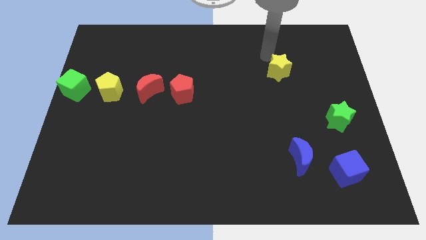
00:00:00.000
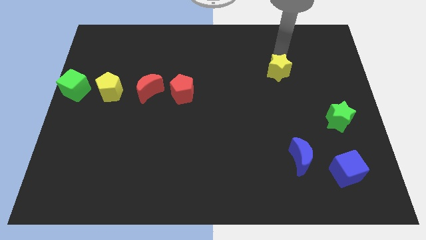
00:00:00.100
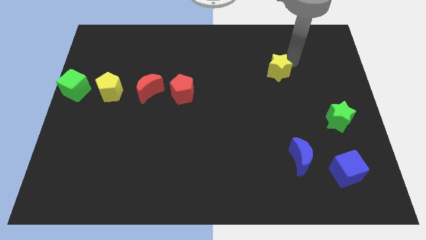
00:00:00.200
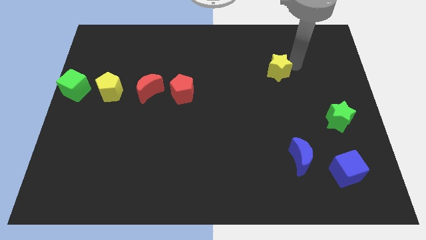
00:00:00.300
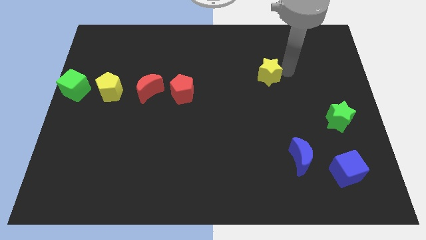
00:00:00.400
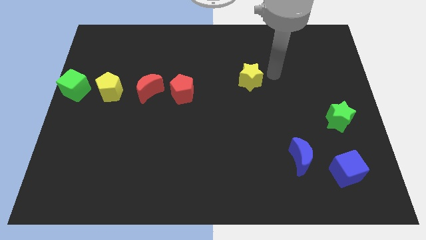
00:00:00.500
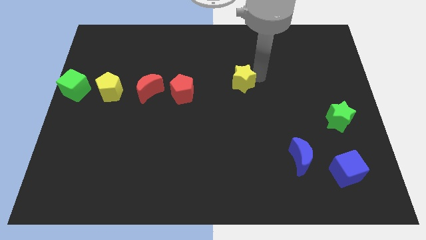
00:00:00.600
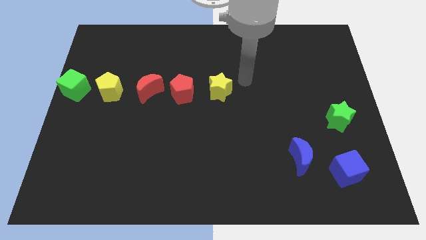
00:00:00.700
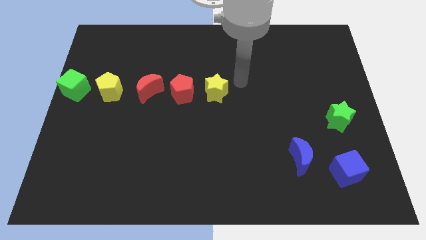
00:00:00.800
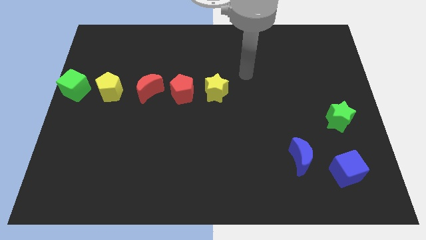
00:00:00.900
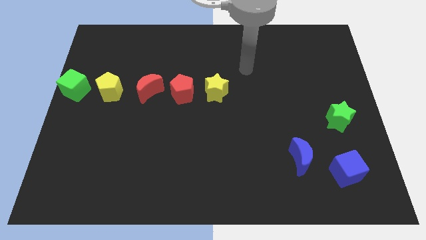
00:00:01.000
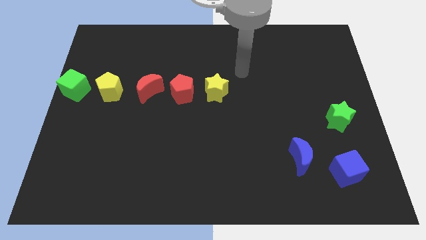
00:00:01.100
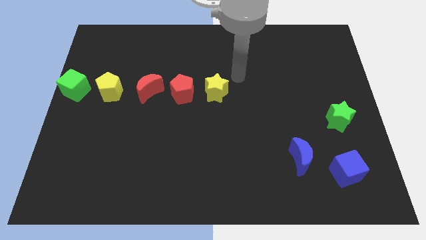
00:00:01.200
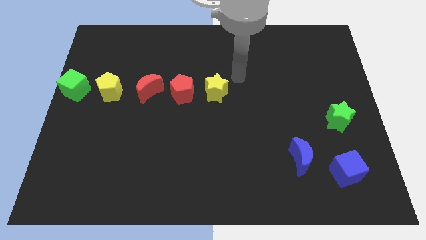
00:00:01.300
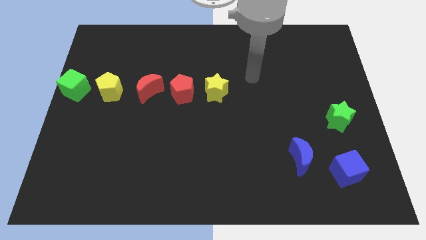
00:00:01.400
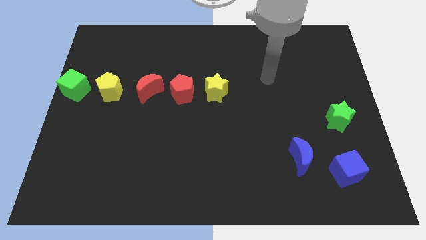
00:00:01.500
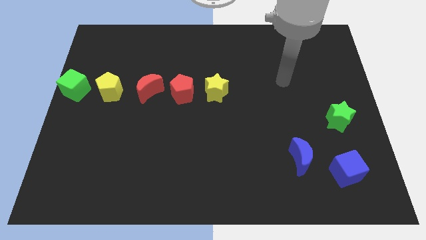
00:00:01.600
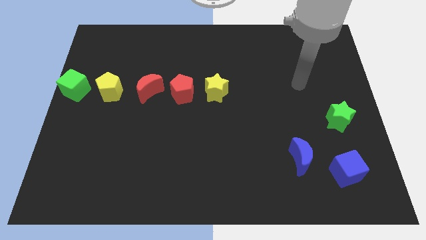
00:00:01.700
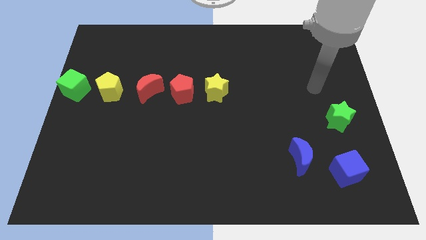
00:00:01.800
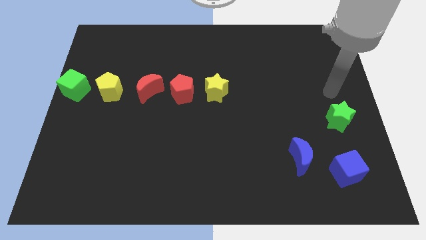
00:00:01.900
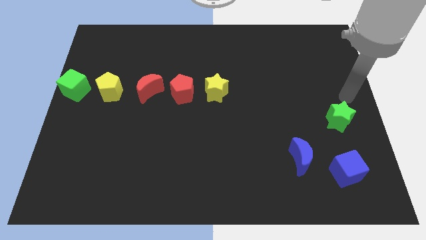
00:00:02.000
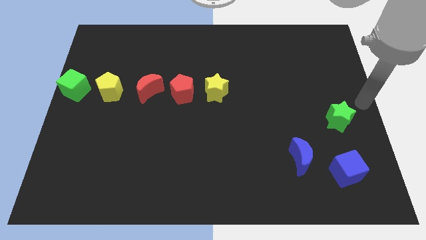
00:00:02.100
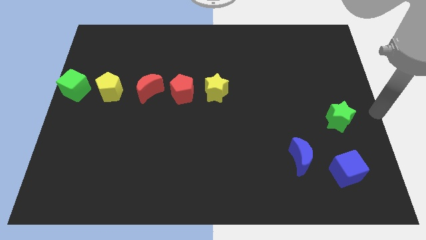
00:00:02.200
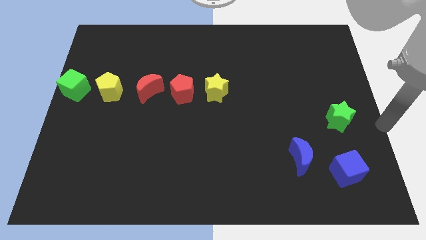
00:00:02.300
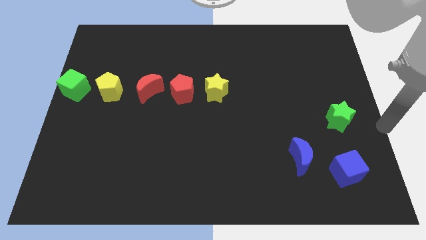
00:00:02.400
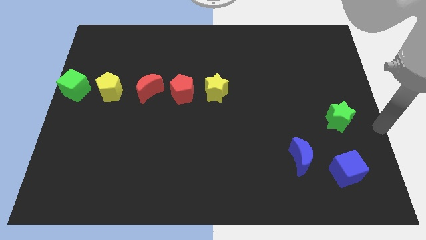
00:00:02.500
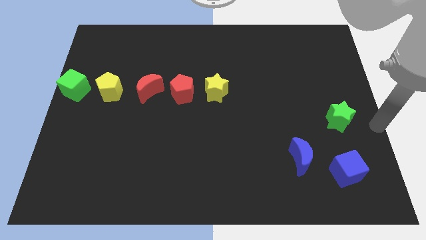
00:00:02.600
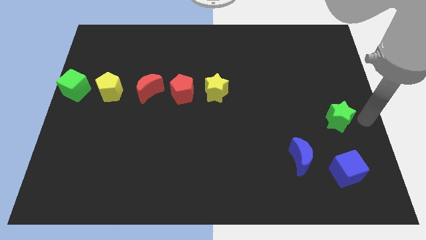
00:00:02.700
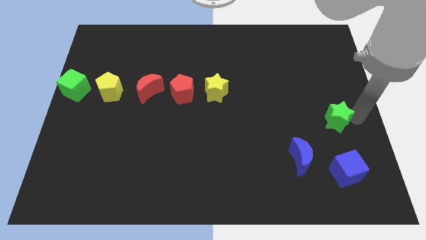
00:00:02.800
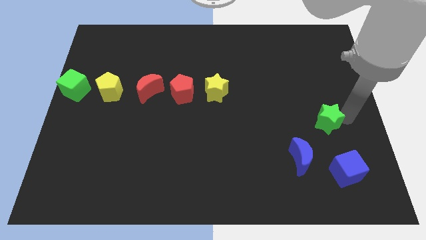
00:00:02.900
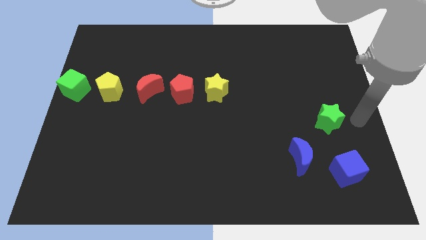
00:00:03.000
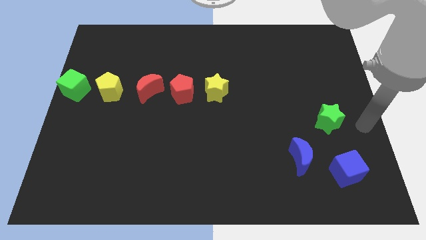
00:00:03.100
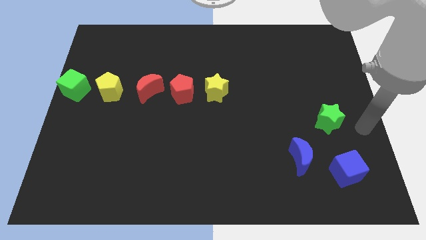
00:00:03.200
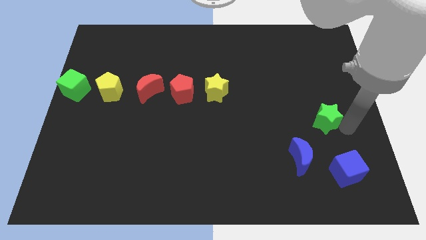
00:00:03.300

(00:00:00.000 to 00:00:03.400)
move the yellow star to the right of the red pentagon

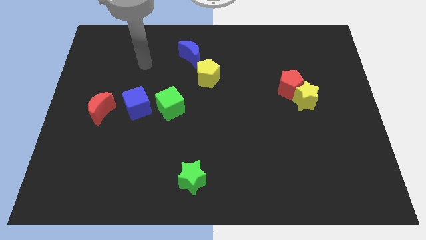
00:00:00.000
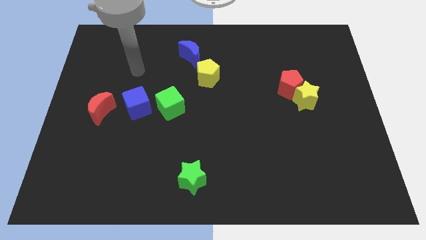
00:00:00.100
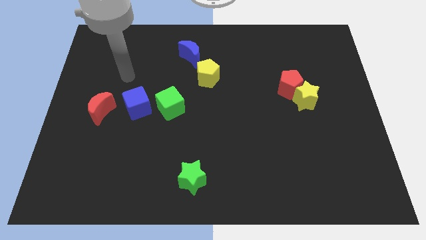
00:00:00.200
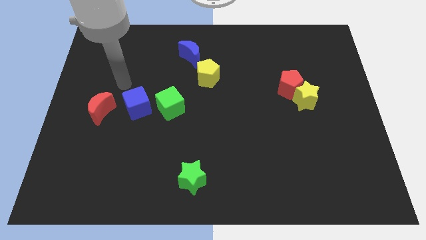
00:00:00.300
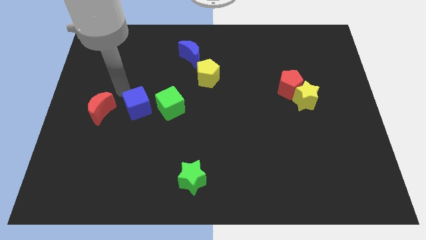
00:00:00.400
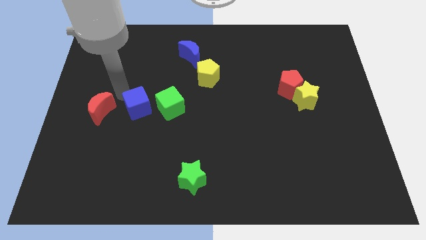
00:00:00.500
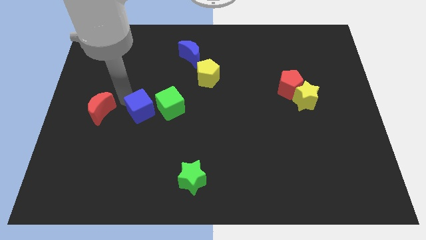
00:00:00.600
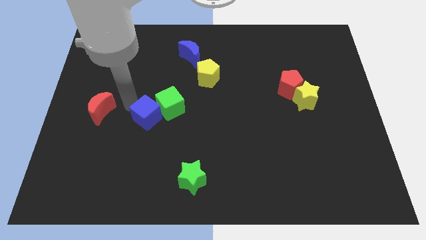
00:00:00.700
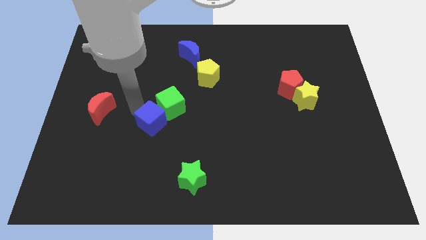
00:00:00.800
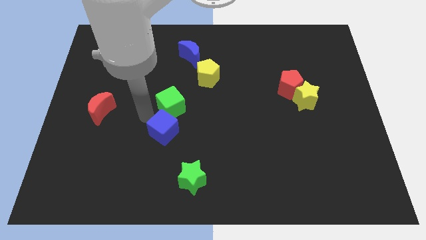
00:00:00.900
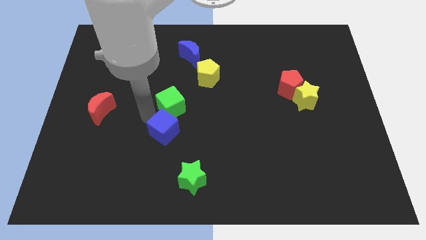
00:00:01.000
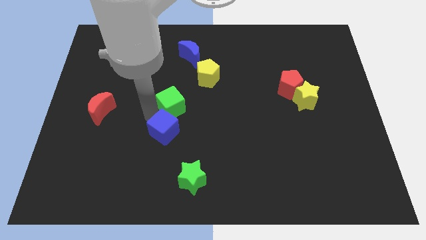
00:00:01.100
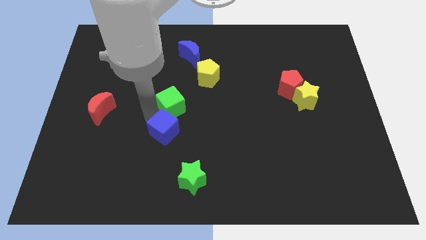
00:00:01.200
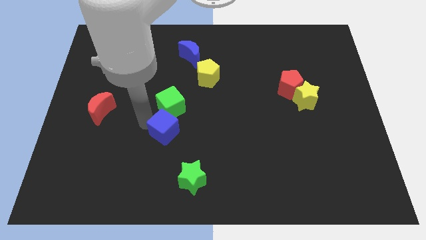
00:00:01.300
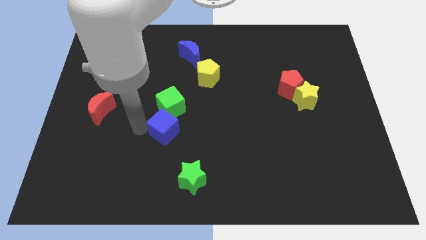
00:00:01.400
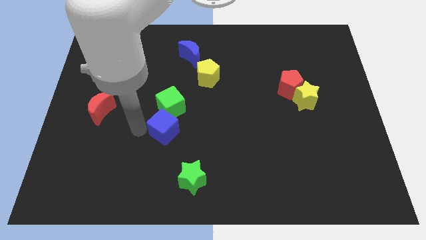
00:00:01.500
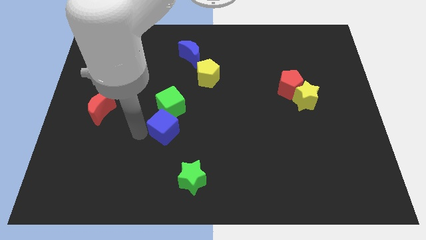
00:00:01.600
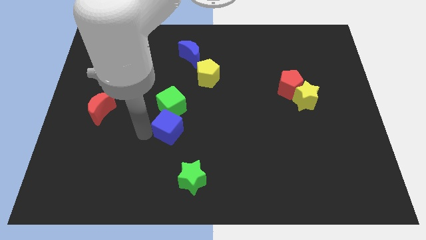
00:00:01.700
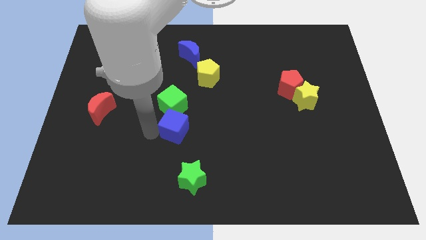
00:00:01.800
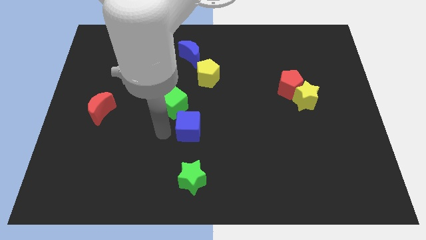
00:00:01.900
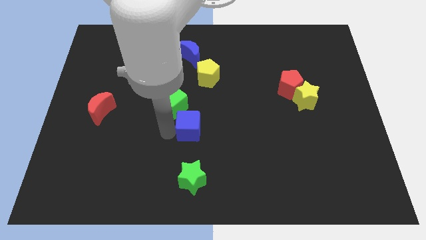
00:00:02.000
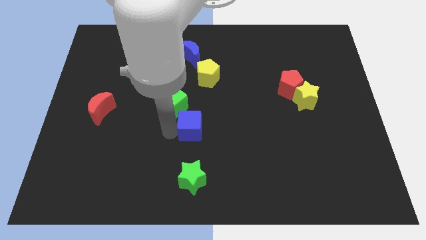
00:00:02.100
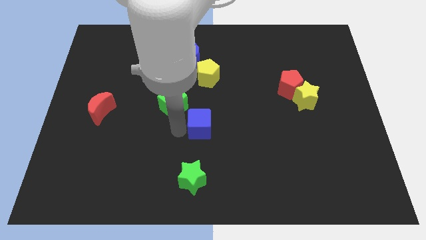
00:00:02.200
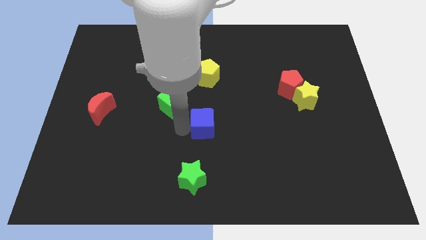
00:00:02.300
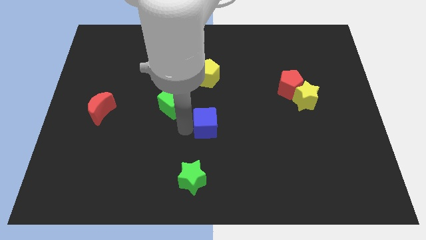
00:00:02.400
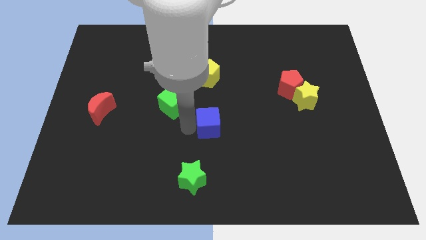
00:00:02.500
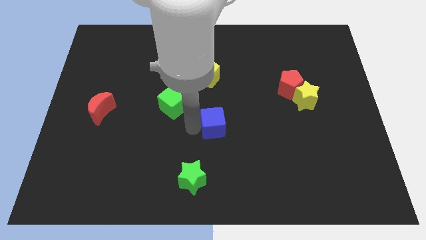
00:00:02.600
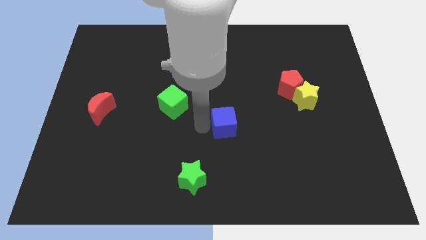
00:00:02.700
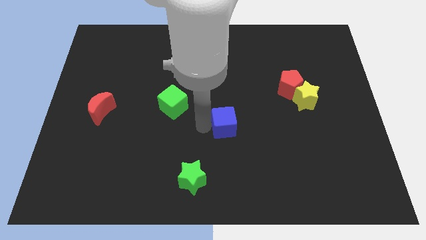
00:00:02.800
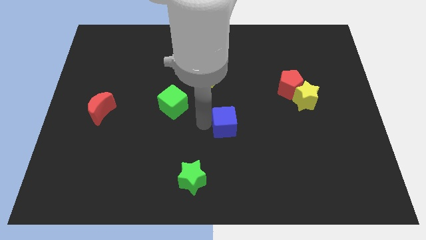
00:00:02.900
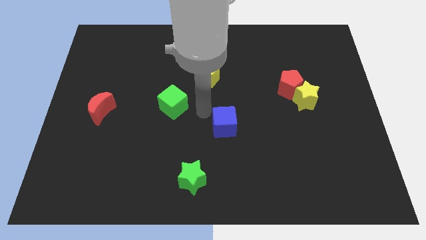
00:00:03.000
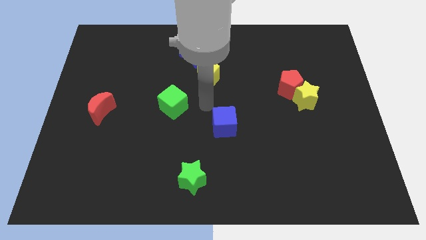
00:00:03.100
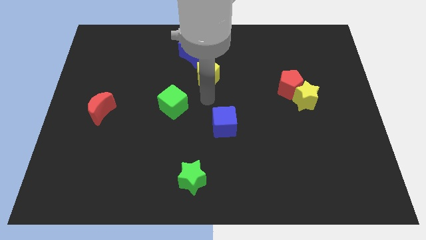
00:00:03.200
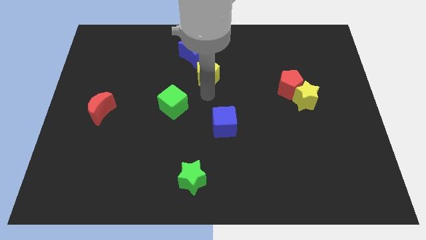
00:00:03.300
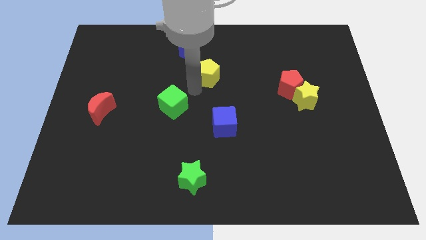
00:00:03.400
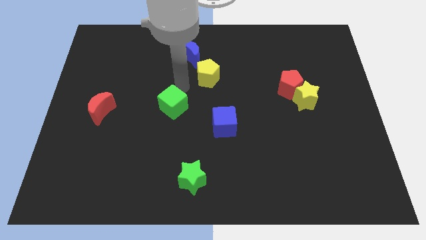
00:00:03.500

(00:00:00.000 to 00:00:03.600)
push the blue cube to the center of the board

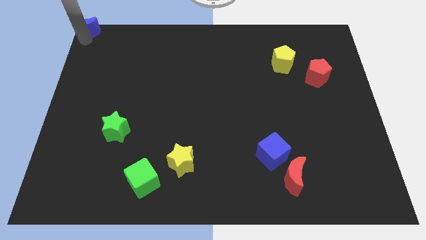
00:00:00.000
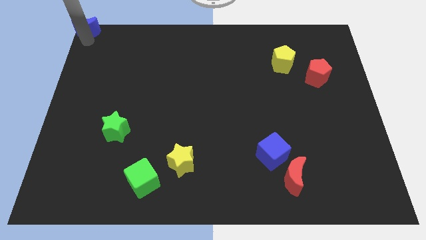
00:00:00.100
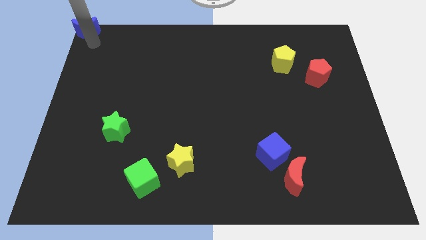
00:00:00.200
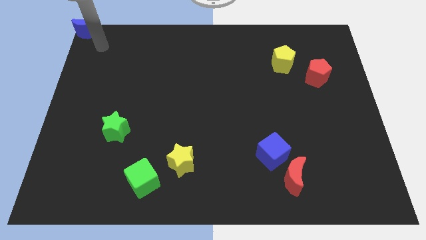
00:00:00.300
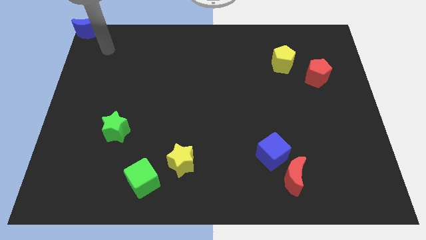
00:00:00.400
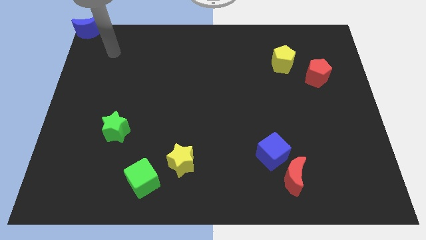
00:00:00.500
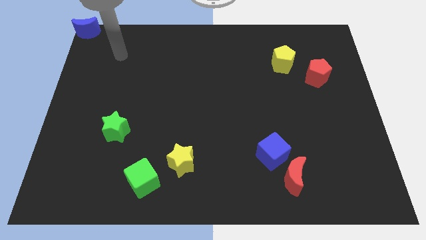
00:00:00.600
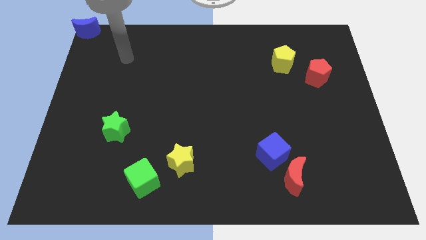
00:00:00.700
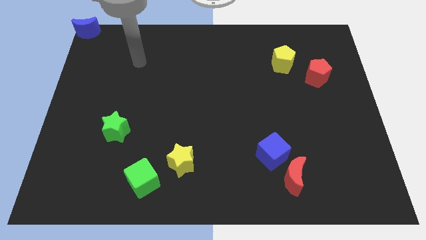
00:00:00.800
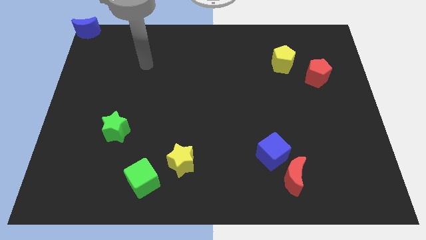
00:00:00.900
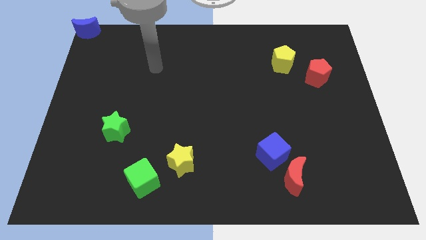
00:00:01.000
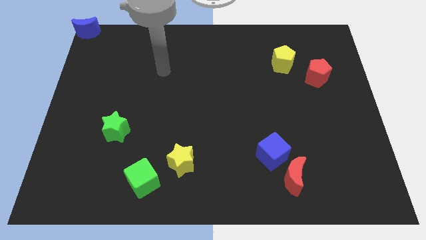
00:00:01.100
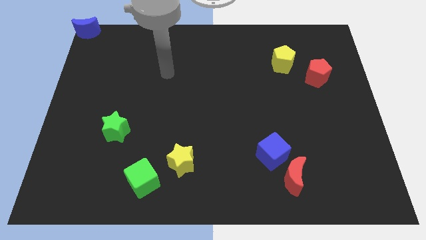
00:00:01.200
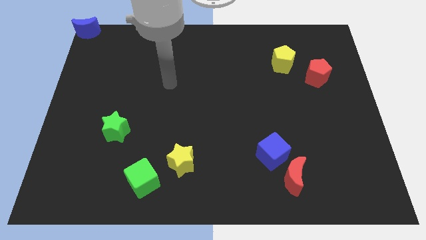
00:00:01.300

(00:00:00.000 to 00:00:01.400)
move your arm diagonally to the center

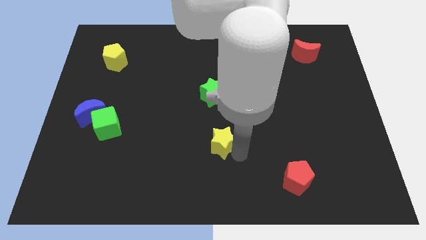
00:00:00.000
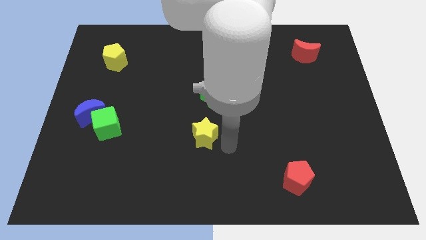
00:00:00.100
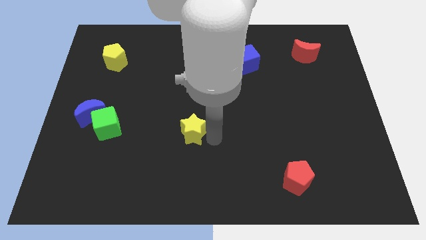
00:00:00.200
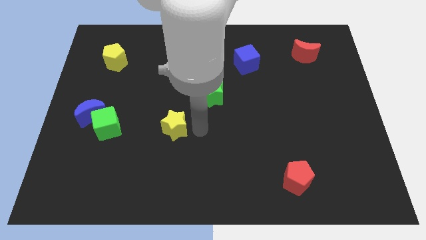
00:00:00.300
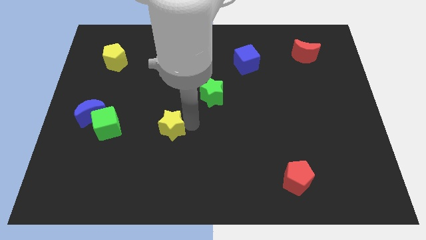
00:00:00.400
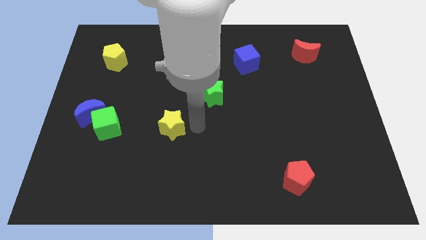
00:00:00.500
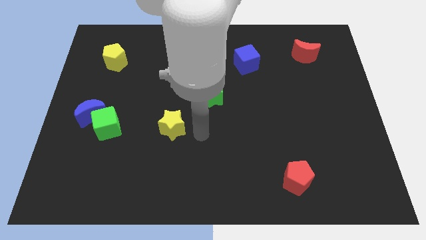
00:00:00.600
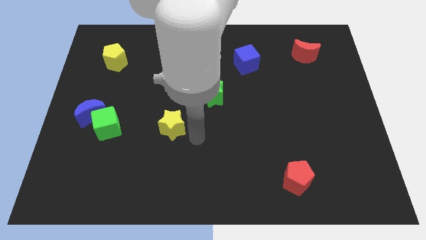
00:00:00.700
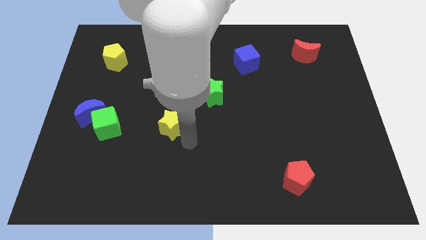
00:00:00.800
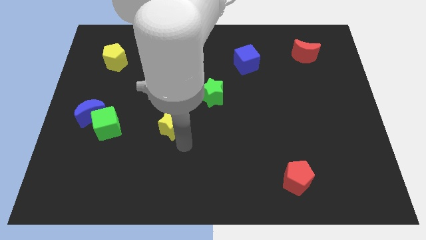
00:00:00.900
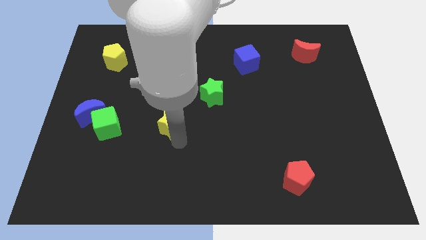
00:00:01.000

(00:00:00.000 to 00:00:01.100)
place yellow star parallel right of the green cube
